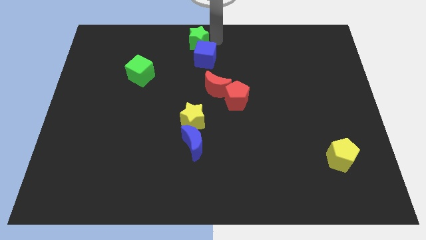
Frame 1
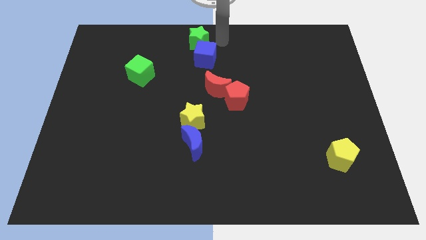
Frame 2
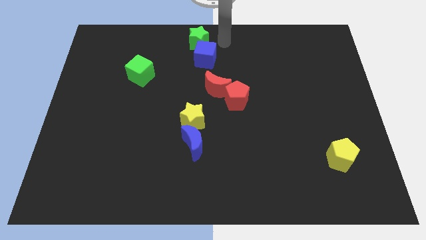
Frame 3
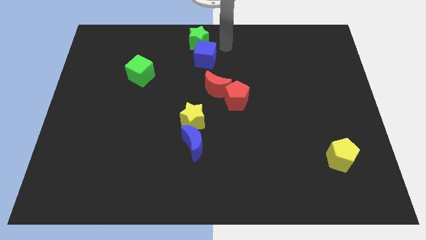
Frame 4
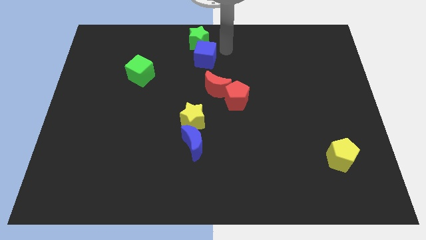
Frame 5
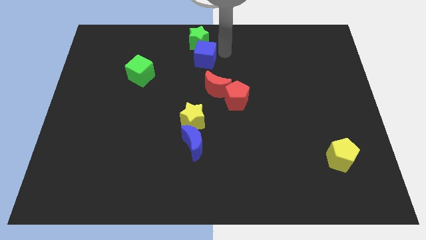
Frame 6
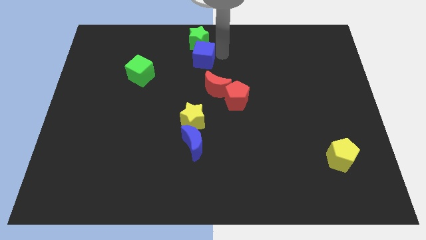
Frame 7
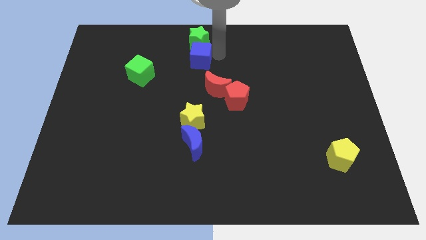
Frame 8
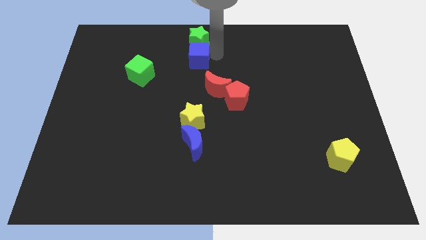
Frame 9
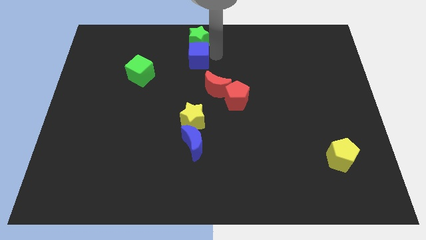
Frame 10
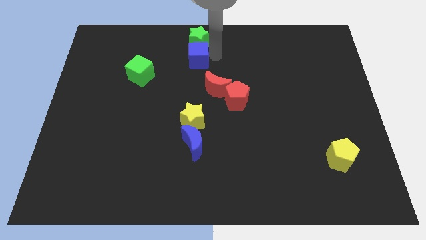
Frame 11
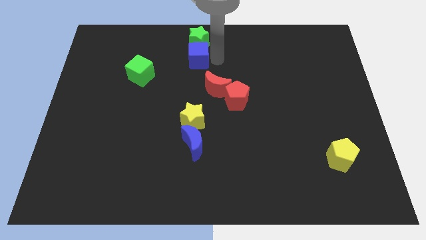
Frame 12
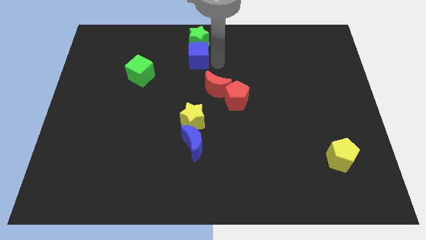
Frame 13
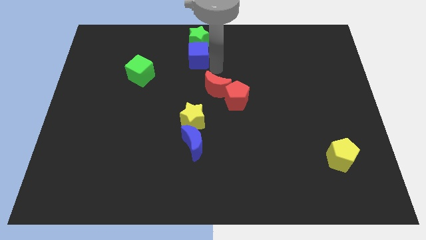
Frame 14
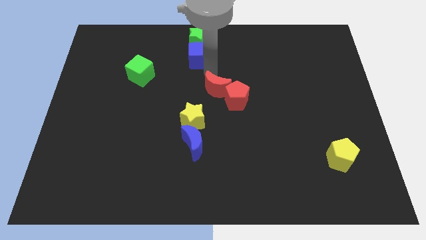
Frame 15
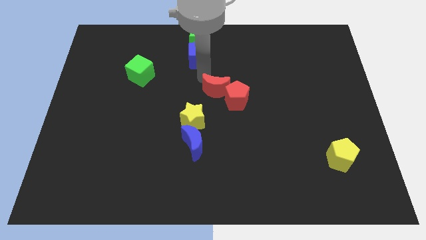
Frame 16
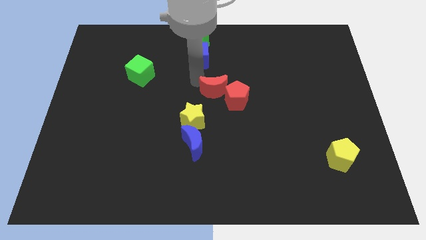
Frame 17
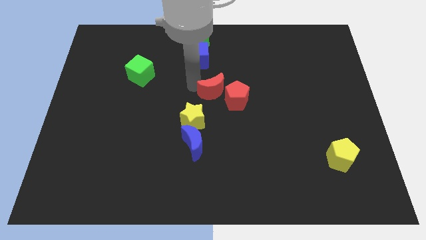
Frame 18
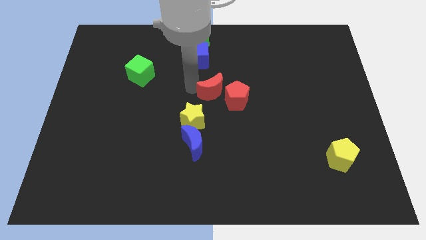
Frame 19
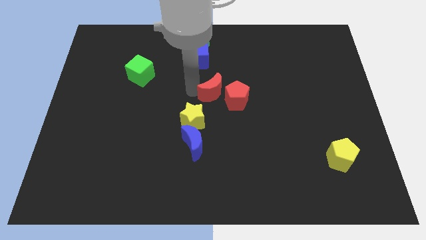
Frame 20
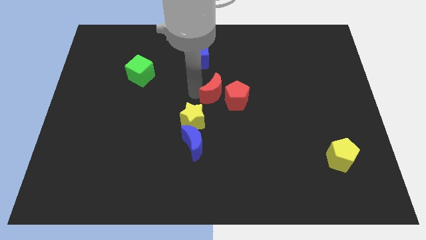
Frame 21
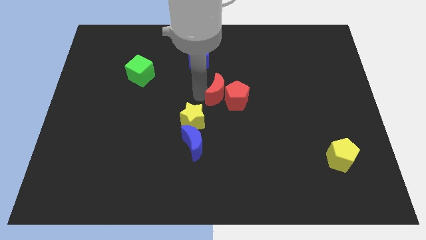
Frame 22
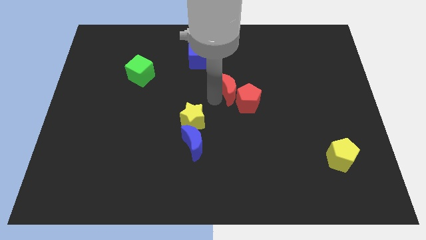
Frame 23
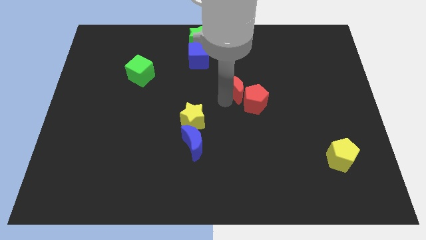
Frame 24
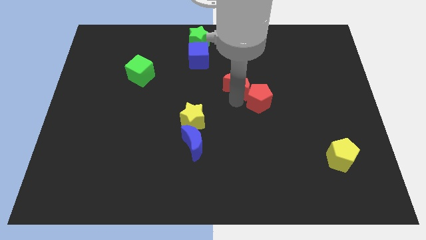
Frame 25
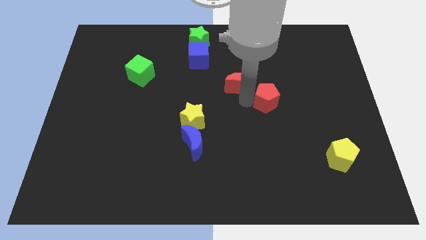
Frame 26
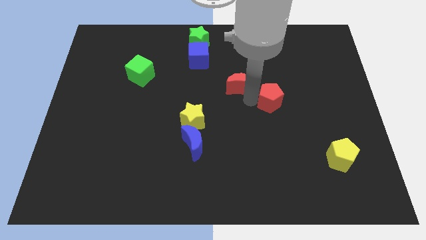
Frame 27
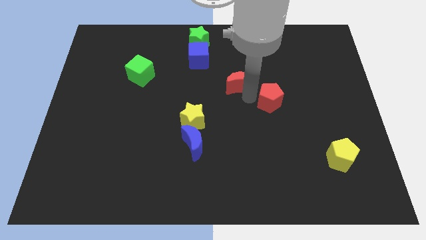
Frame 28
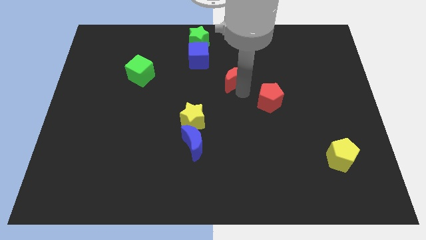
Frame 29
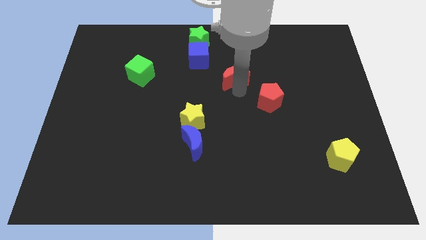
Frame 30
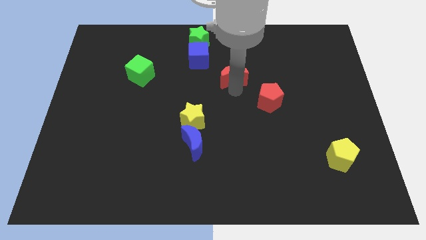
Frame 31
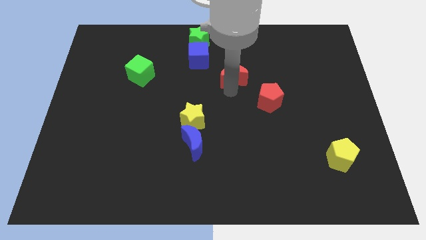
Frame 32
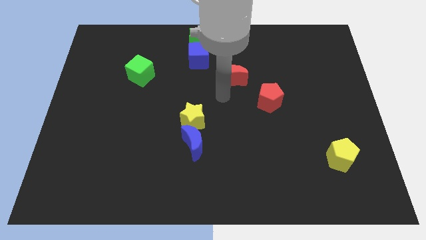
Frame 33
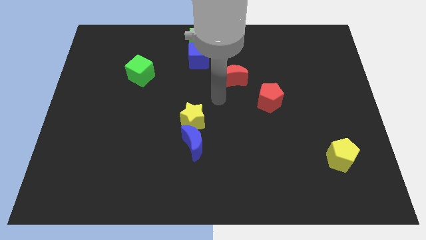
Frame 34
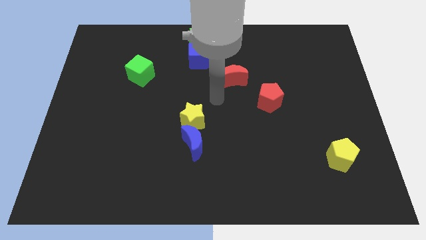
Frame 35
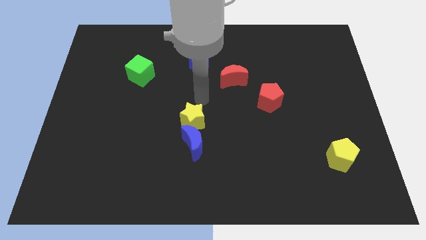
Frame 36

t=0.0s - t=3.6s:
separate red pentagon from red moon

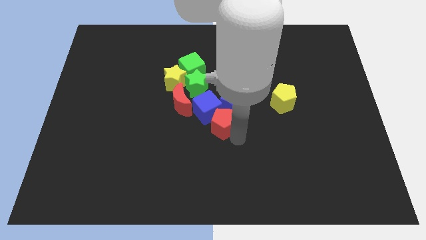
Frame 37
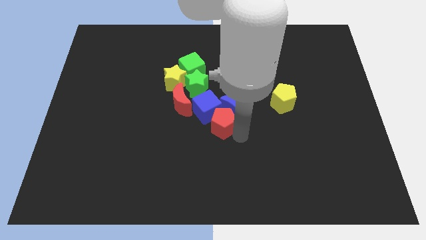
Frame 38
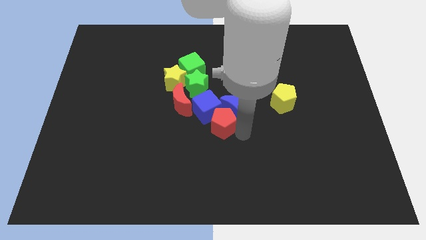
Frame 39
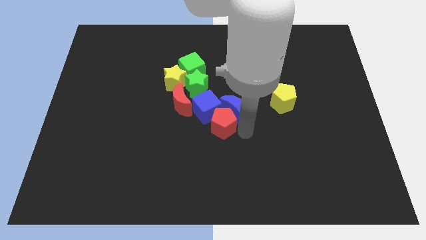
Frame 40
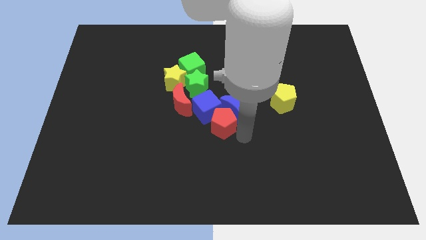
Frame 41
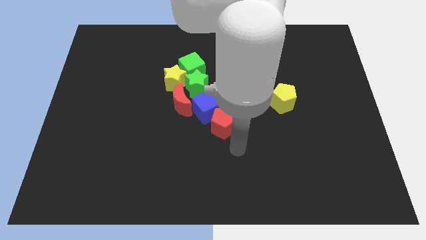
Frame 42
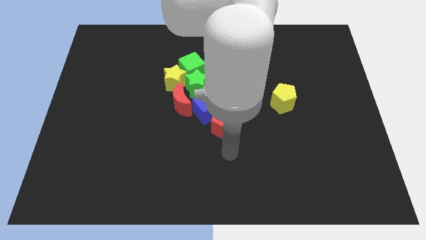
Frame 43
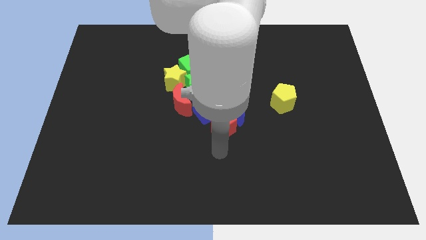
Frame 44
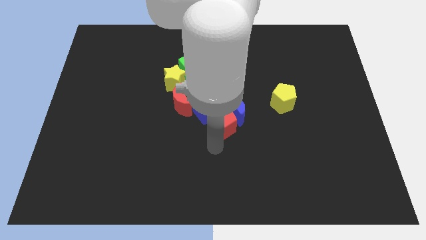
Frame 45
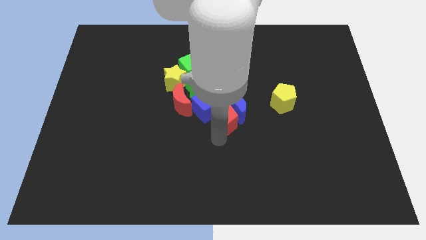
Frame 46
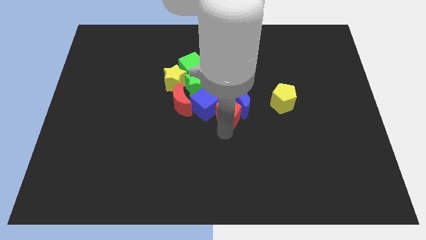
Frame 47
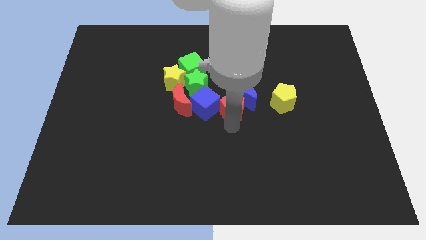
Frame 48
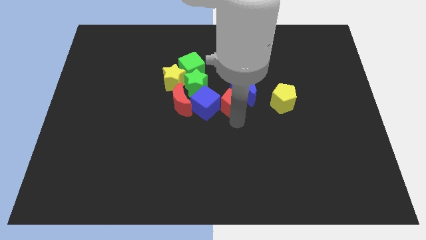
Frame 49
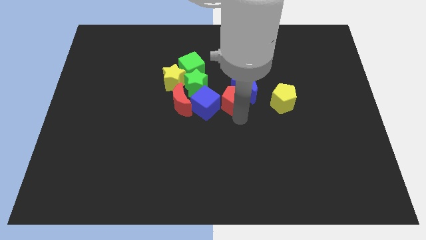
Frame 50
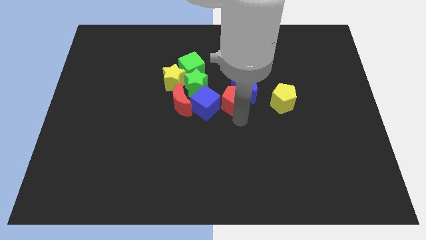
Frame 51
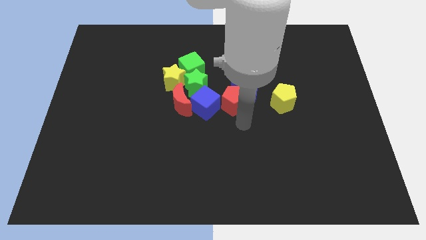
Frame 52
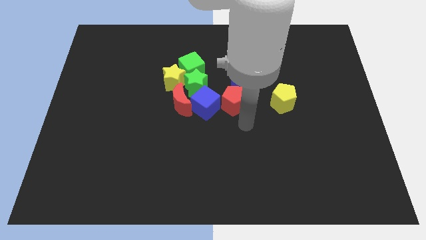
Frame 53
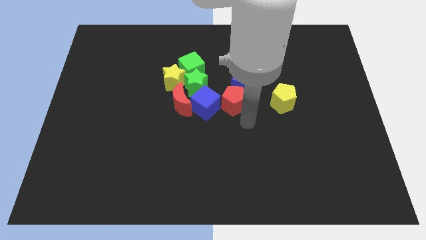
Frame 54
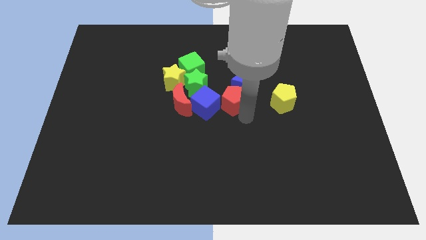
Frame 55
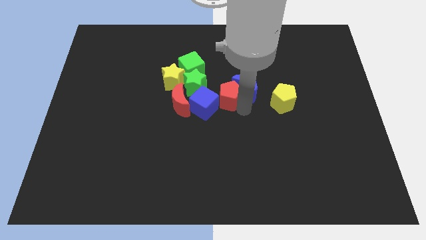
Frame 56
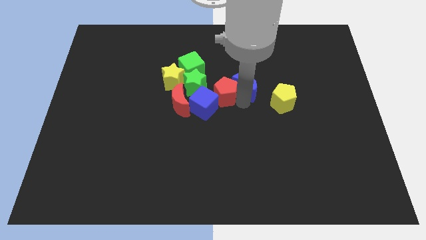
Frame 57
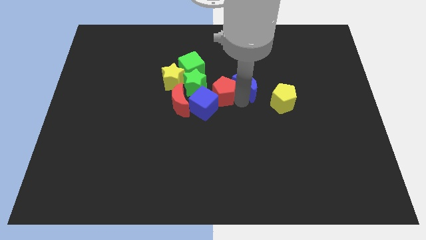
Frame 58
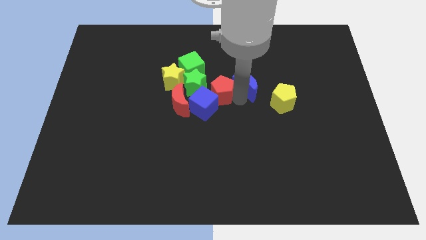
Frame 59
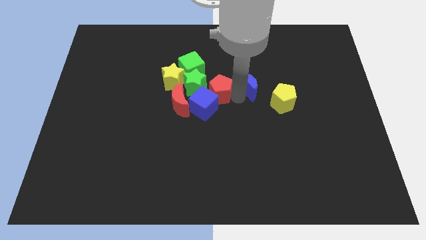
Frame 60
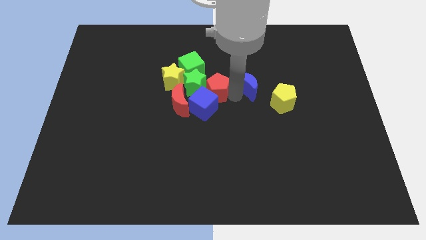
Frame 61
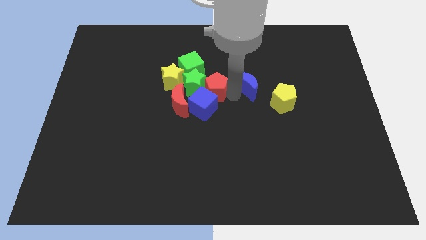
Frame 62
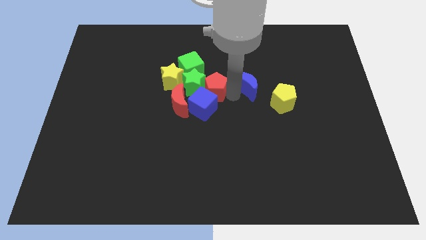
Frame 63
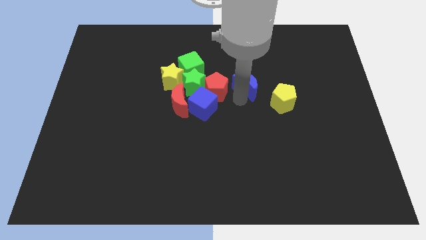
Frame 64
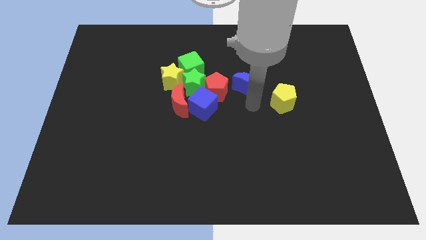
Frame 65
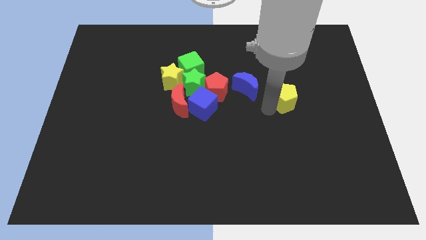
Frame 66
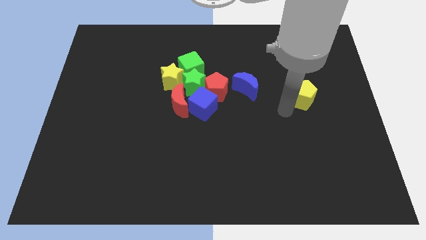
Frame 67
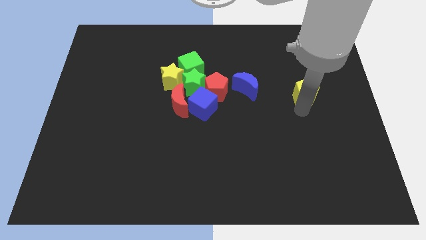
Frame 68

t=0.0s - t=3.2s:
move red pentagon into green star

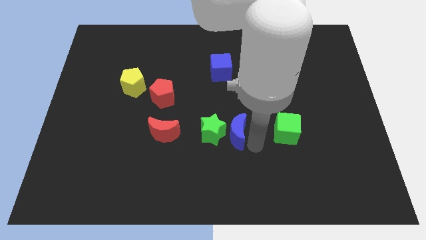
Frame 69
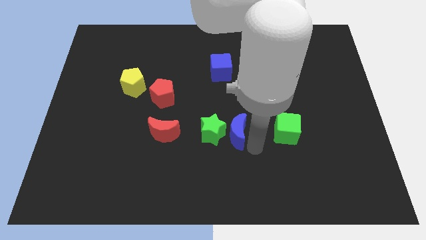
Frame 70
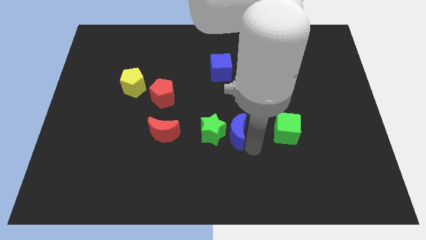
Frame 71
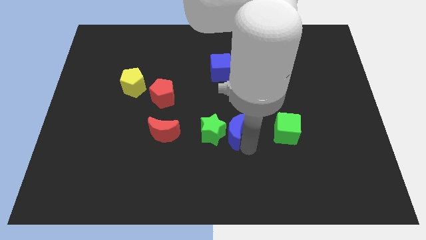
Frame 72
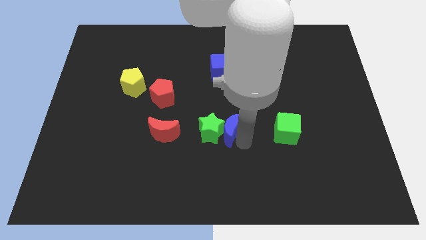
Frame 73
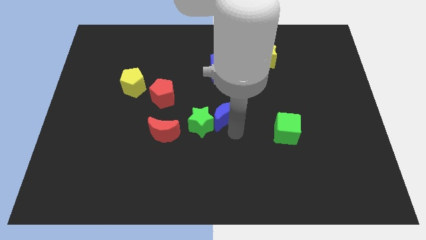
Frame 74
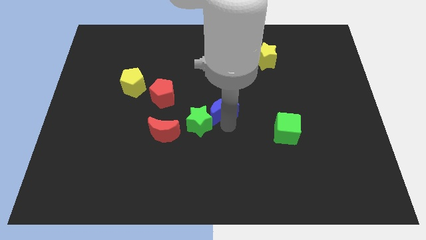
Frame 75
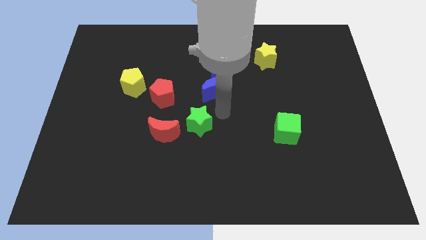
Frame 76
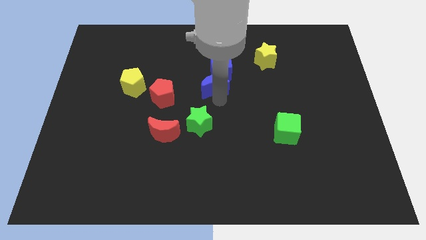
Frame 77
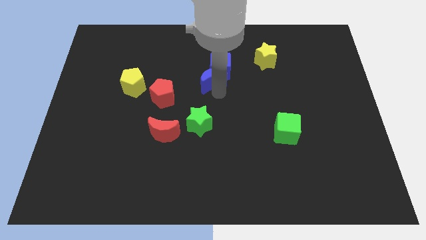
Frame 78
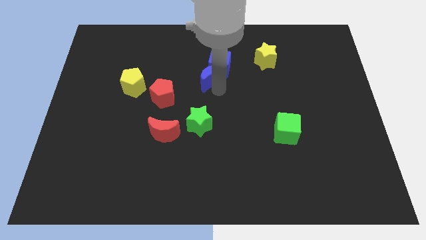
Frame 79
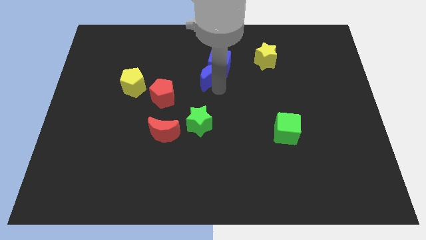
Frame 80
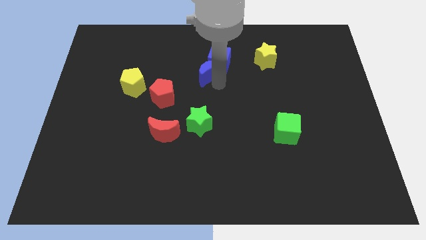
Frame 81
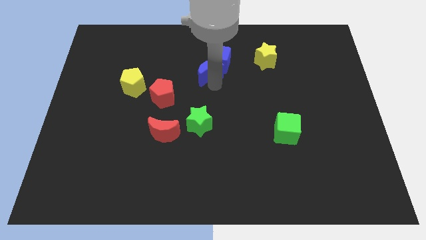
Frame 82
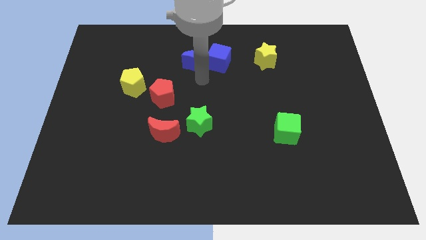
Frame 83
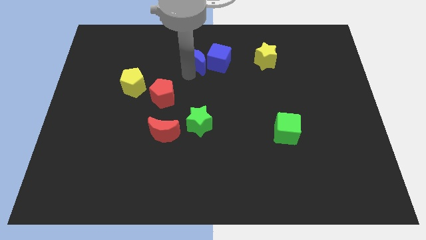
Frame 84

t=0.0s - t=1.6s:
place the blue moon to the left side of the blue cube

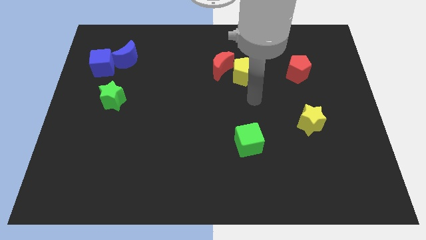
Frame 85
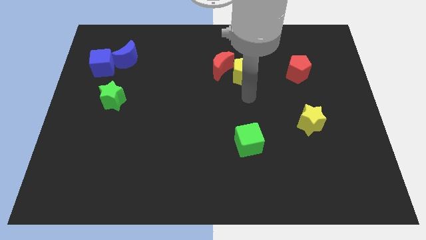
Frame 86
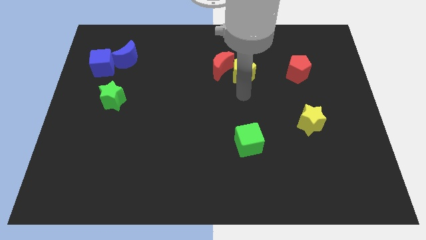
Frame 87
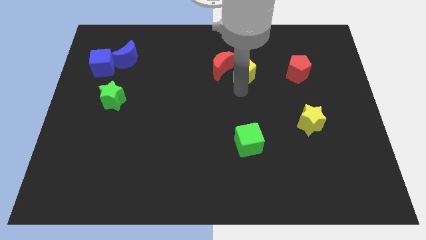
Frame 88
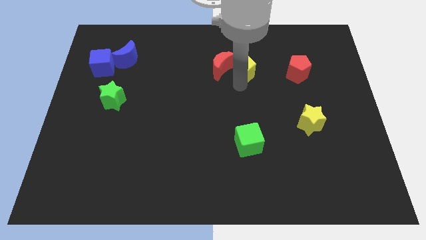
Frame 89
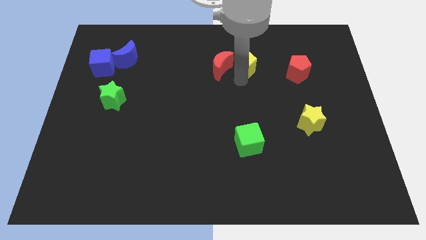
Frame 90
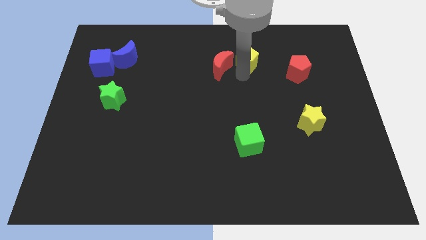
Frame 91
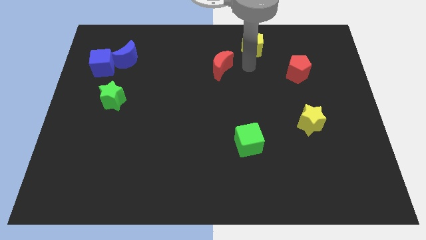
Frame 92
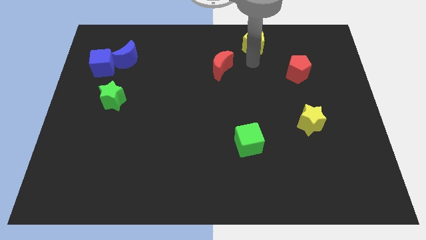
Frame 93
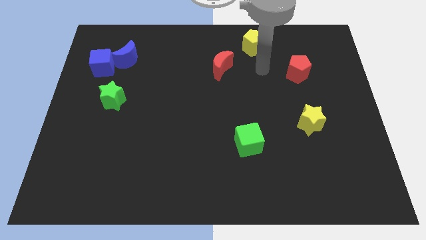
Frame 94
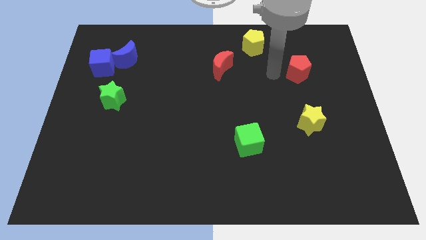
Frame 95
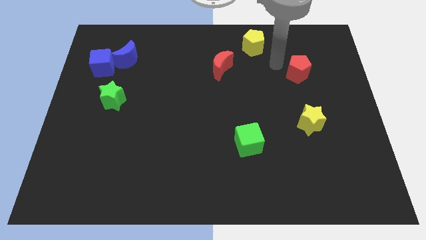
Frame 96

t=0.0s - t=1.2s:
move the yellow pentagon to the top of the board
